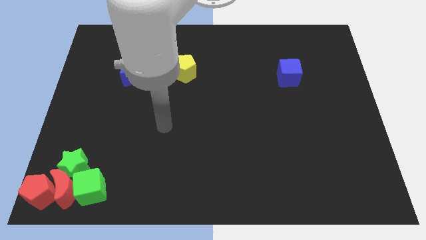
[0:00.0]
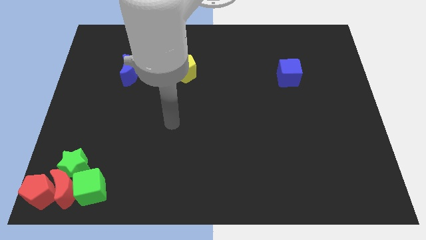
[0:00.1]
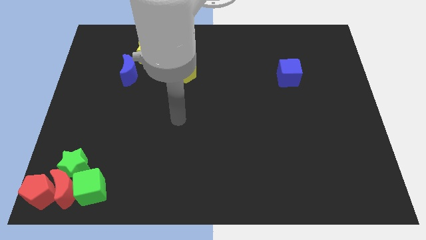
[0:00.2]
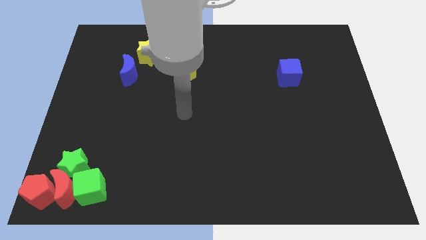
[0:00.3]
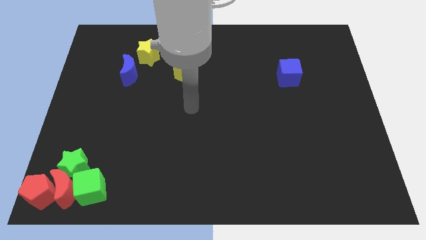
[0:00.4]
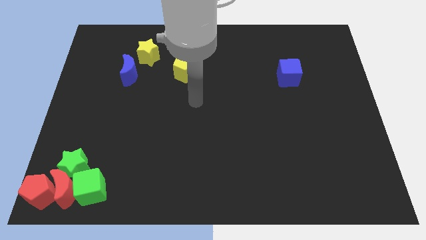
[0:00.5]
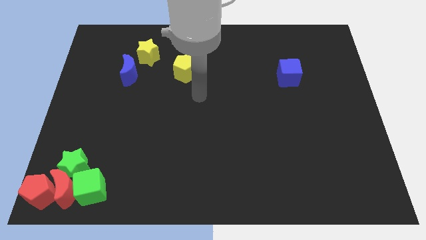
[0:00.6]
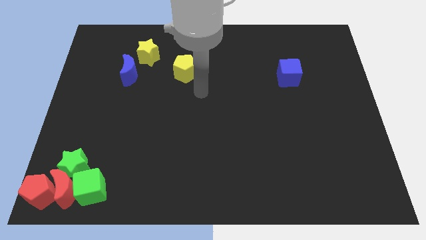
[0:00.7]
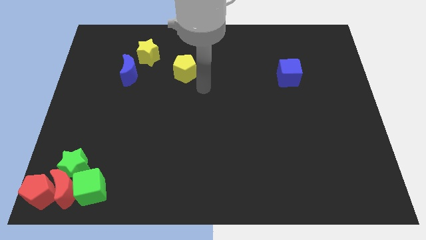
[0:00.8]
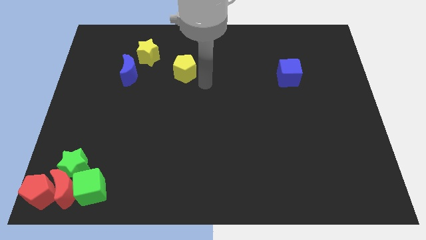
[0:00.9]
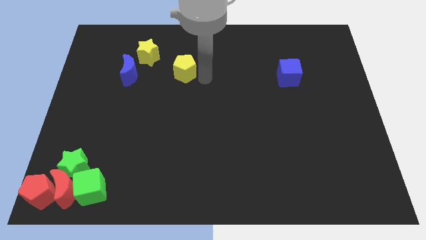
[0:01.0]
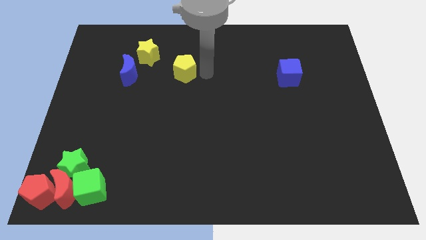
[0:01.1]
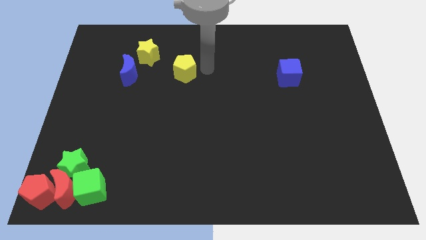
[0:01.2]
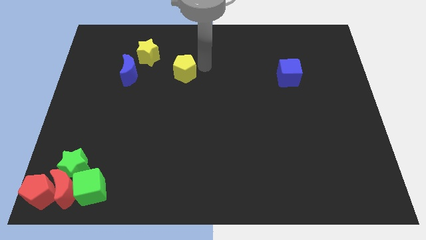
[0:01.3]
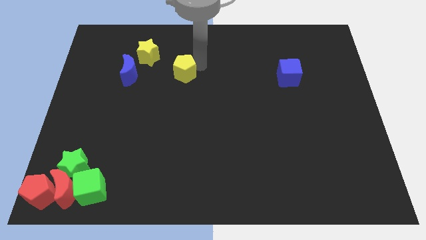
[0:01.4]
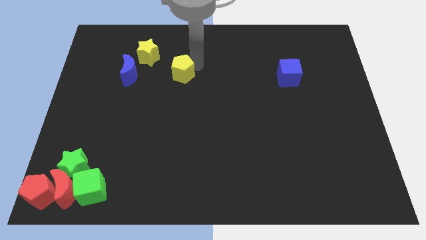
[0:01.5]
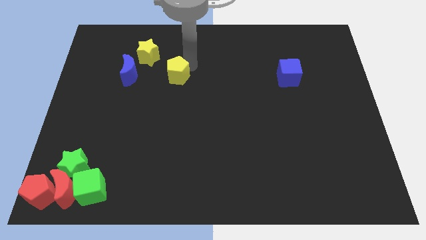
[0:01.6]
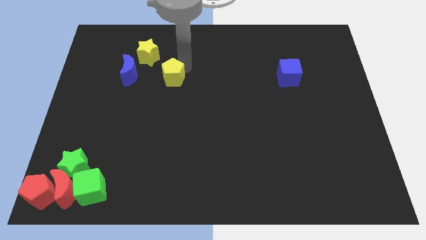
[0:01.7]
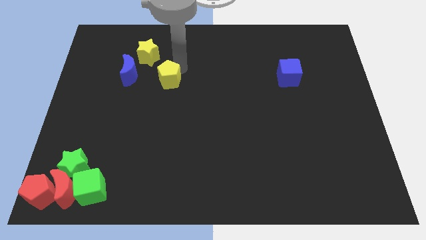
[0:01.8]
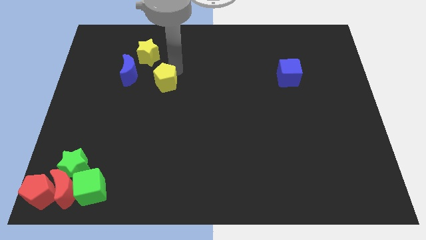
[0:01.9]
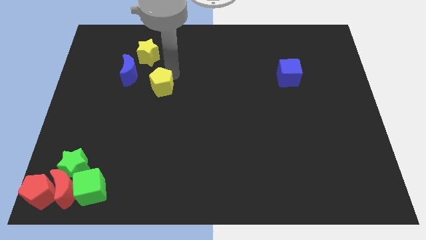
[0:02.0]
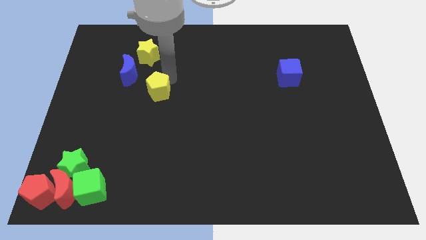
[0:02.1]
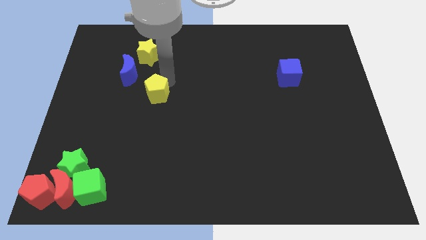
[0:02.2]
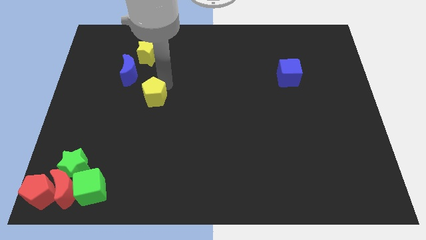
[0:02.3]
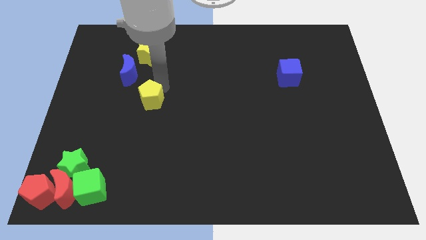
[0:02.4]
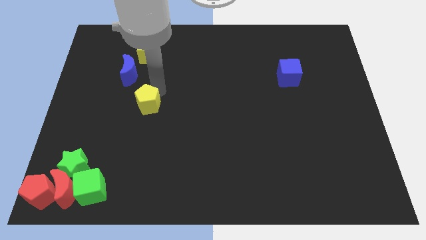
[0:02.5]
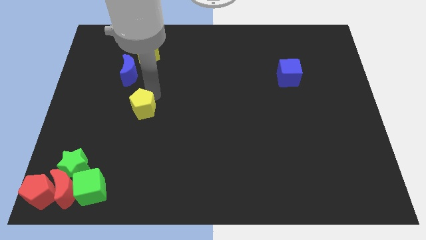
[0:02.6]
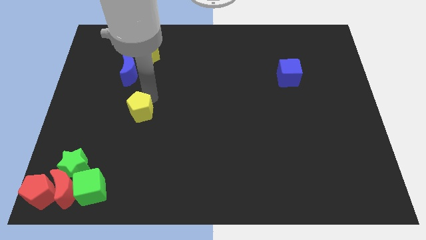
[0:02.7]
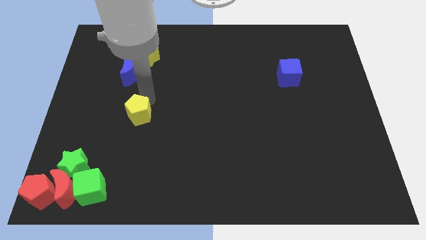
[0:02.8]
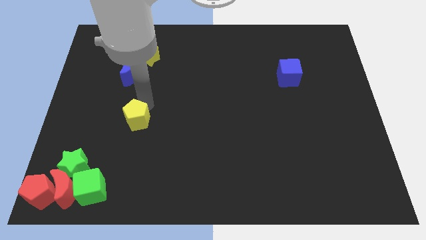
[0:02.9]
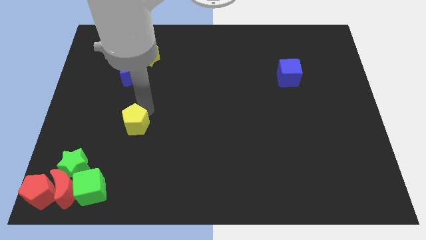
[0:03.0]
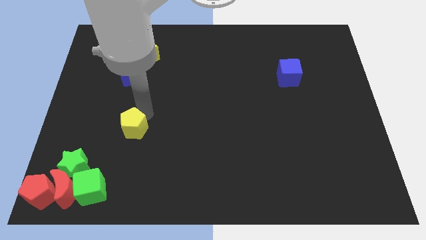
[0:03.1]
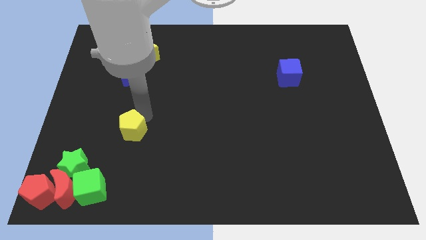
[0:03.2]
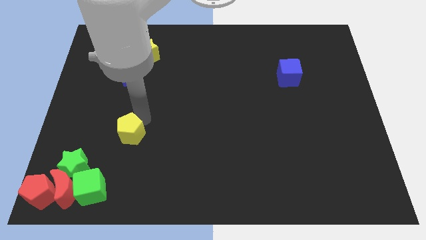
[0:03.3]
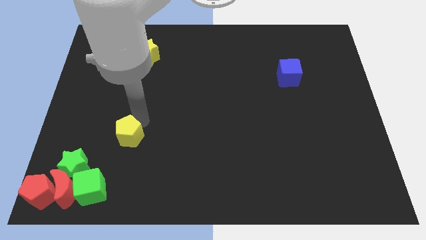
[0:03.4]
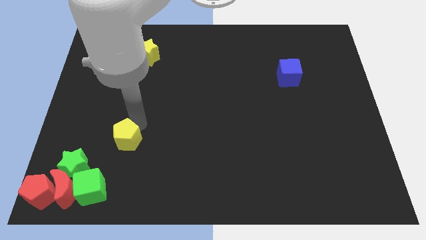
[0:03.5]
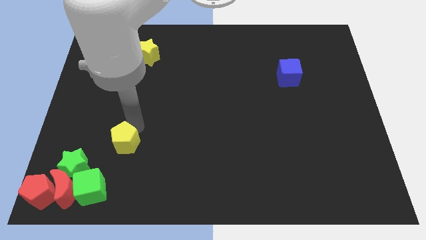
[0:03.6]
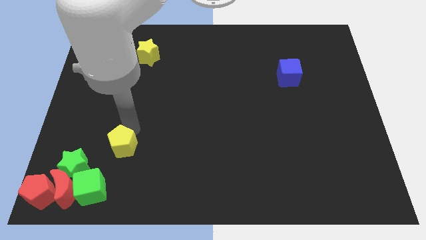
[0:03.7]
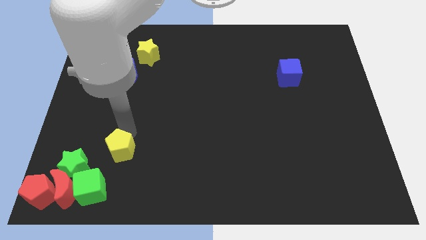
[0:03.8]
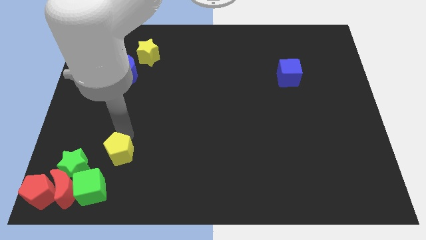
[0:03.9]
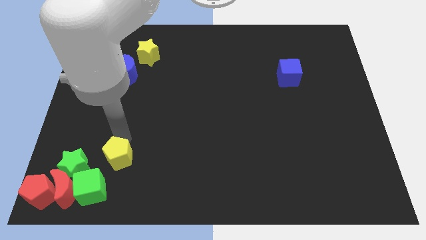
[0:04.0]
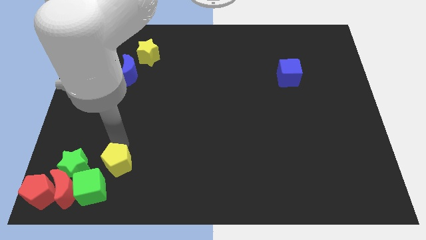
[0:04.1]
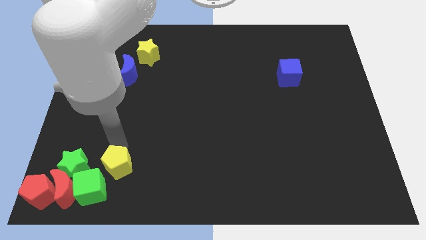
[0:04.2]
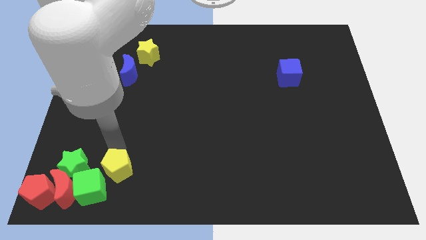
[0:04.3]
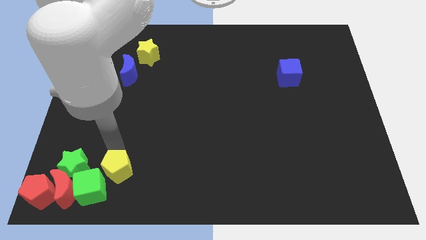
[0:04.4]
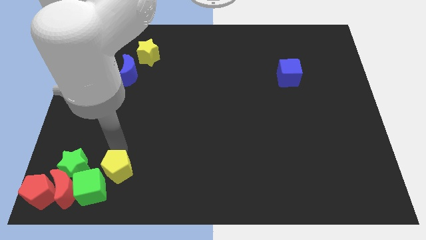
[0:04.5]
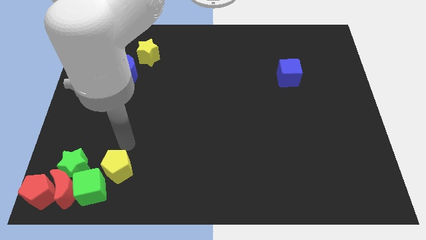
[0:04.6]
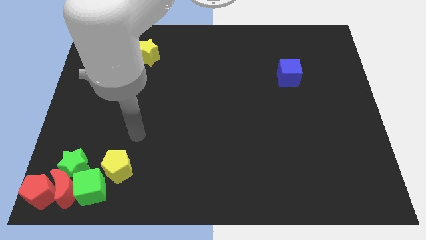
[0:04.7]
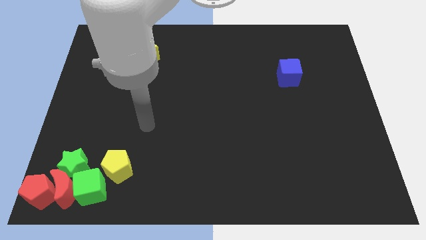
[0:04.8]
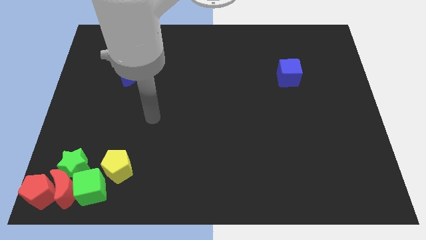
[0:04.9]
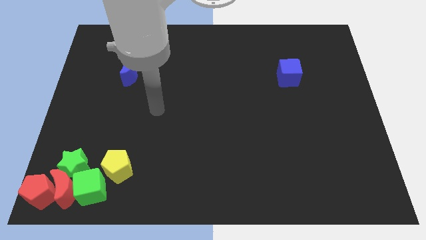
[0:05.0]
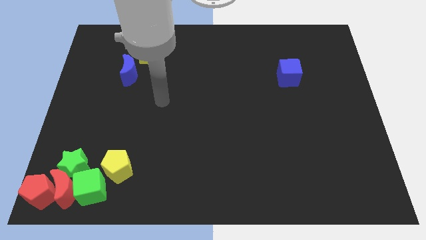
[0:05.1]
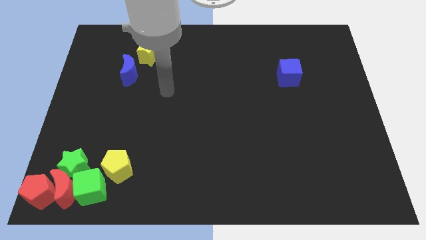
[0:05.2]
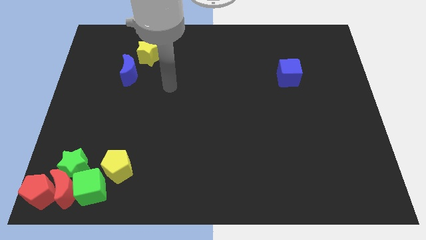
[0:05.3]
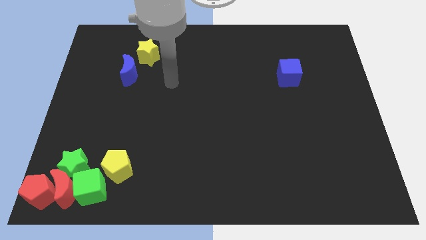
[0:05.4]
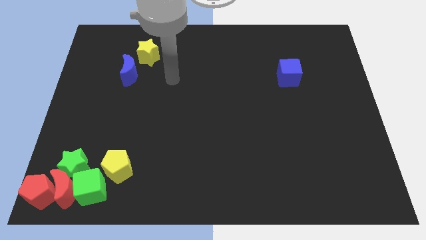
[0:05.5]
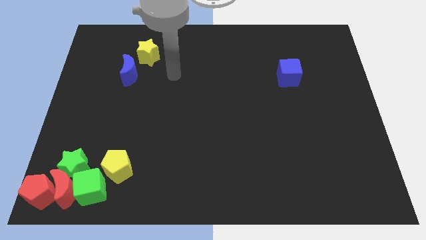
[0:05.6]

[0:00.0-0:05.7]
push the yellow pentagon towards the bottom left of the board

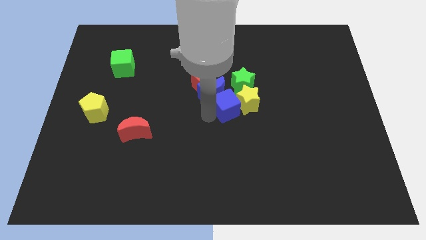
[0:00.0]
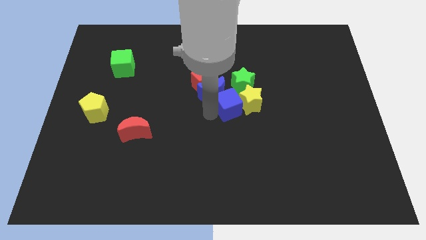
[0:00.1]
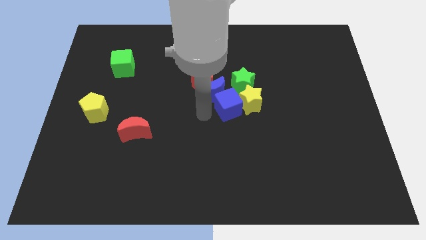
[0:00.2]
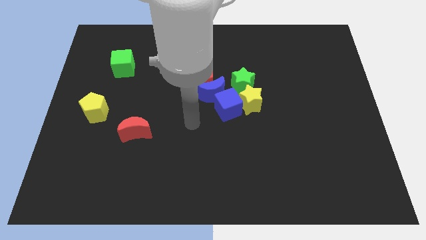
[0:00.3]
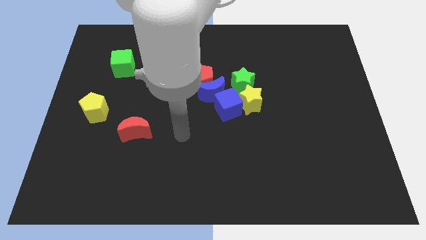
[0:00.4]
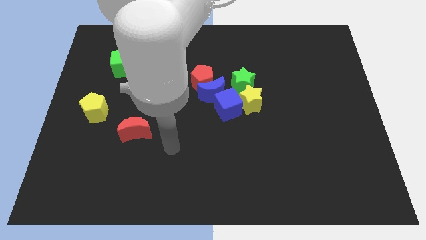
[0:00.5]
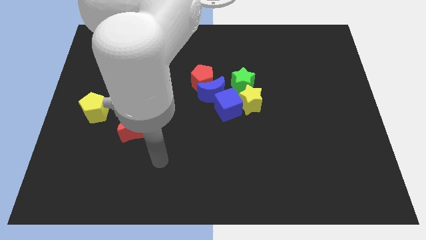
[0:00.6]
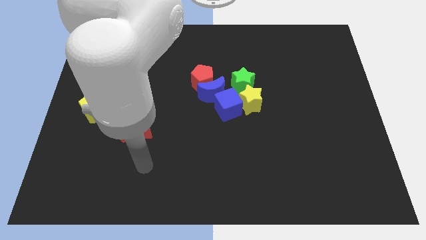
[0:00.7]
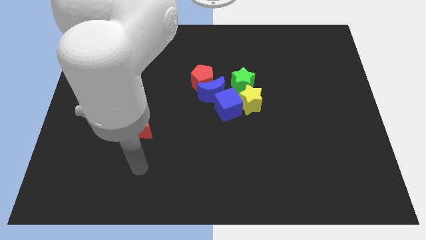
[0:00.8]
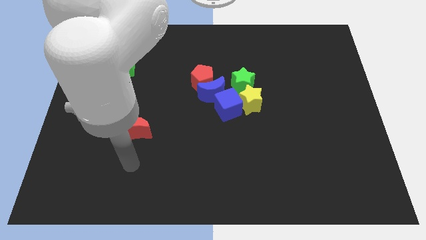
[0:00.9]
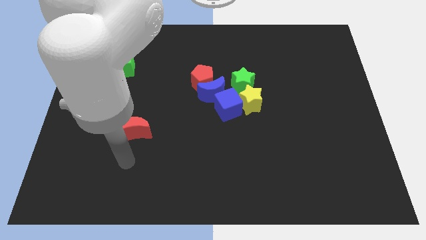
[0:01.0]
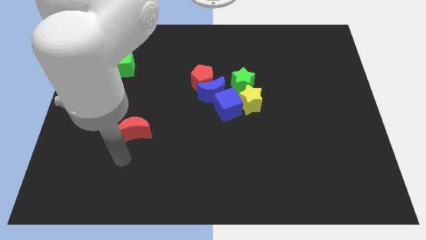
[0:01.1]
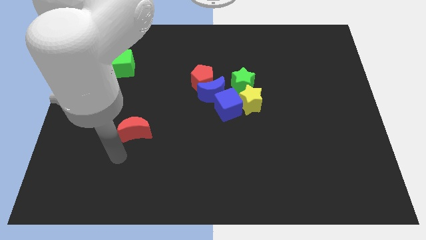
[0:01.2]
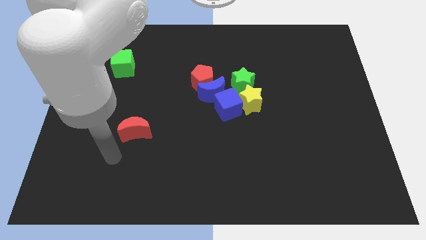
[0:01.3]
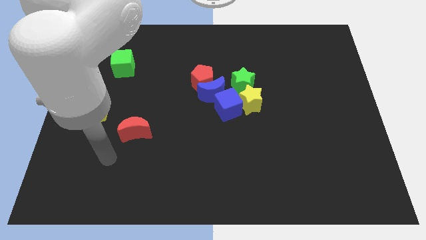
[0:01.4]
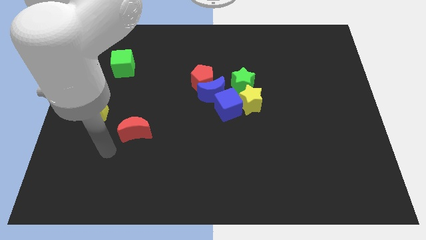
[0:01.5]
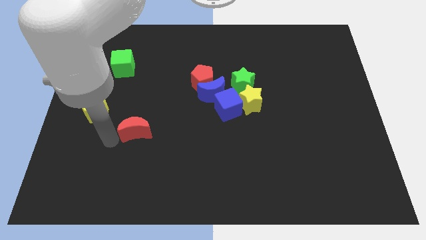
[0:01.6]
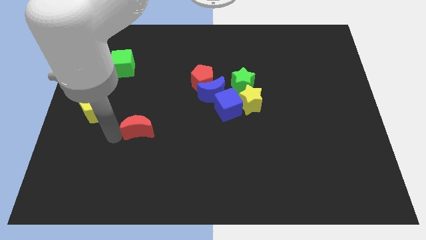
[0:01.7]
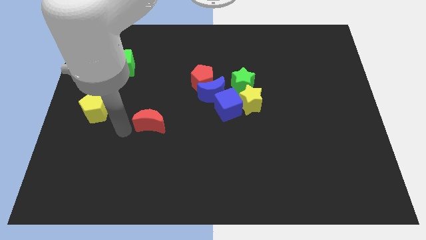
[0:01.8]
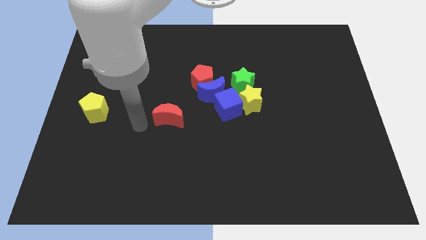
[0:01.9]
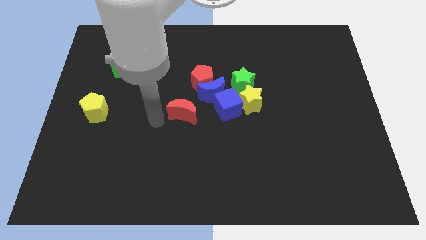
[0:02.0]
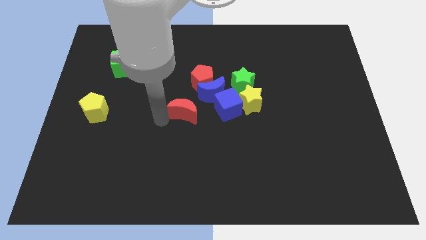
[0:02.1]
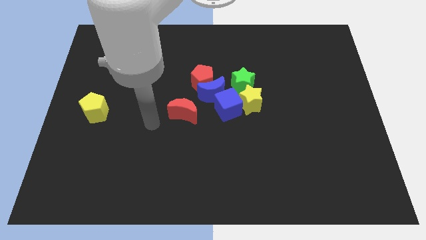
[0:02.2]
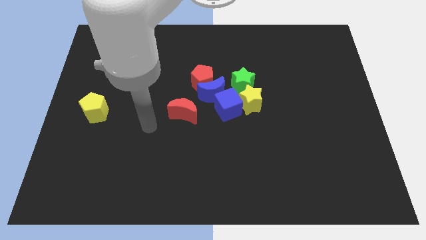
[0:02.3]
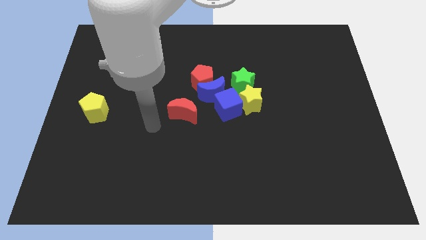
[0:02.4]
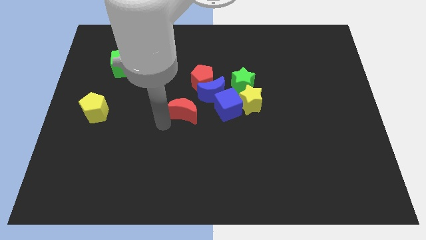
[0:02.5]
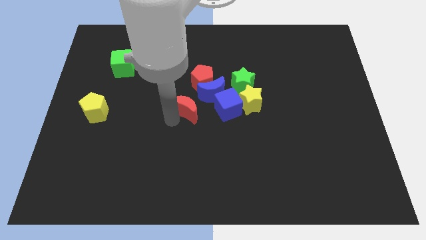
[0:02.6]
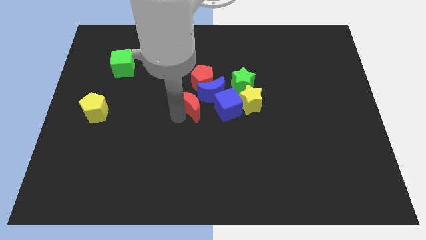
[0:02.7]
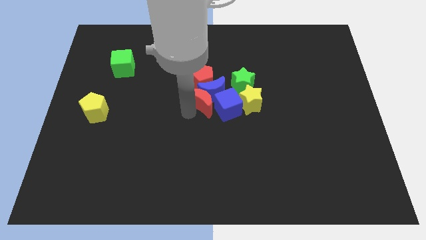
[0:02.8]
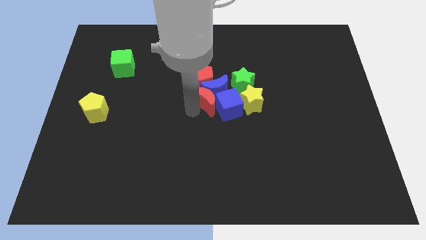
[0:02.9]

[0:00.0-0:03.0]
place the red moon to the left of blue moon and blue cube

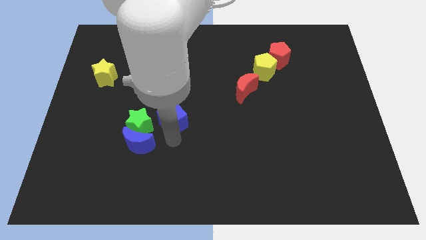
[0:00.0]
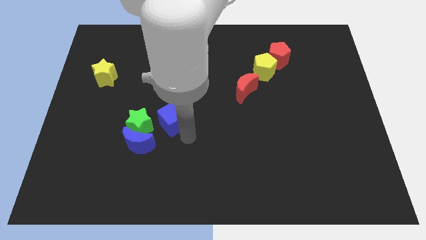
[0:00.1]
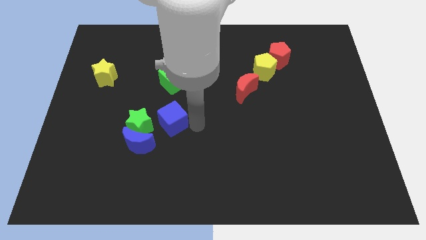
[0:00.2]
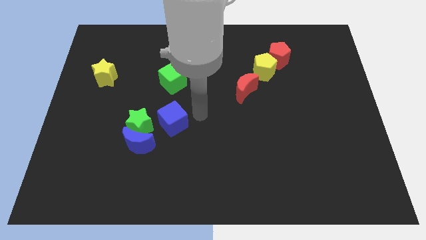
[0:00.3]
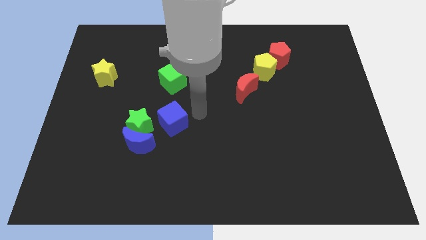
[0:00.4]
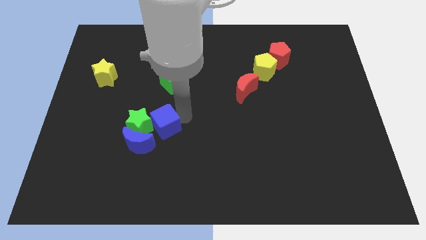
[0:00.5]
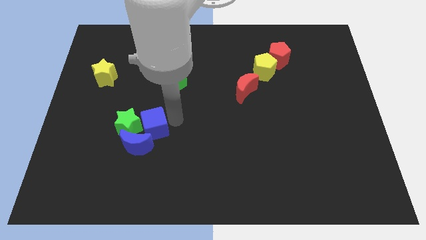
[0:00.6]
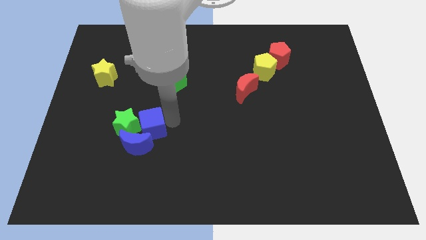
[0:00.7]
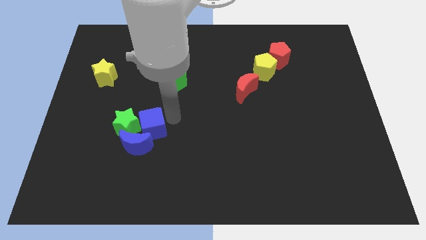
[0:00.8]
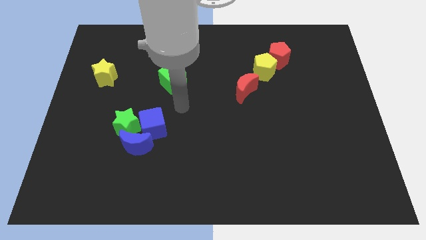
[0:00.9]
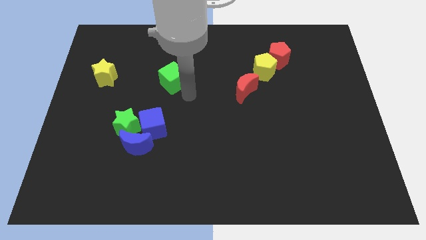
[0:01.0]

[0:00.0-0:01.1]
slide the blue cube into the green star
